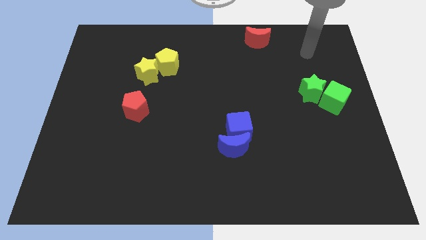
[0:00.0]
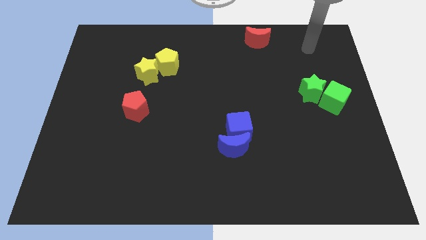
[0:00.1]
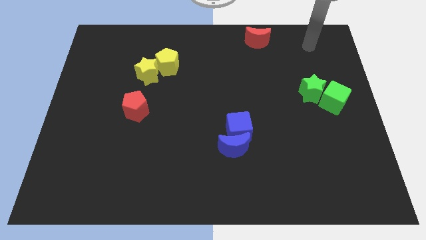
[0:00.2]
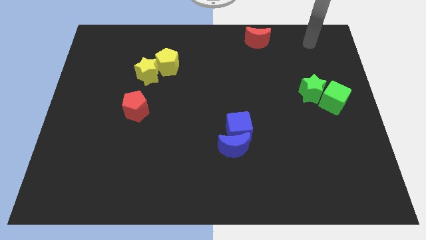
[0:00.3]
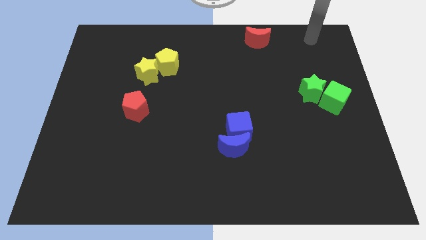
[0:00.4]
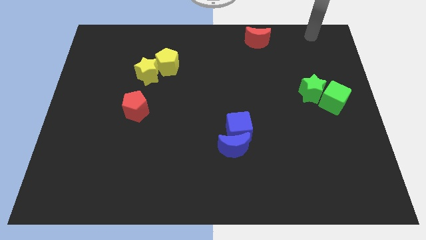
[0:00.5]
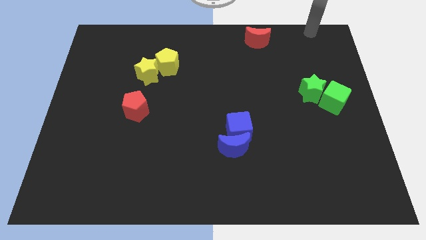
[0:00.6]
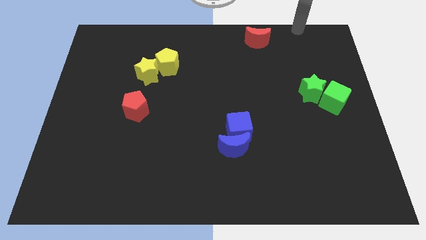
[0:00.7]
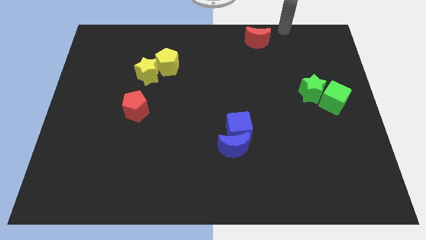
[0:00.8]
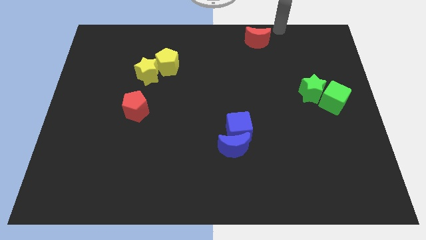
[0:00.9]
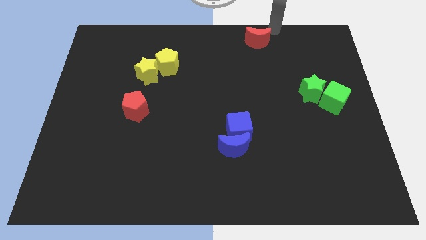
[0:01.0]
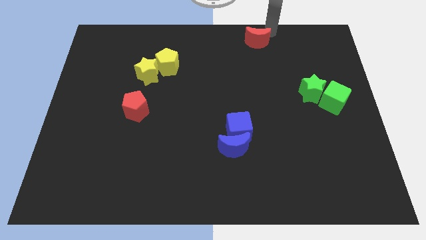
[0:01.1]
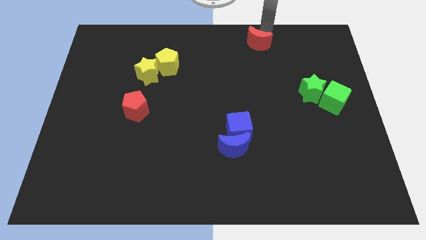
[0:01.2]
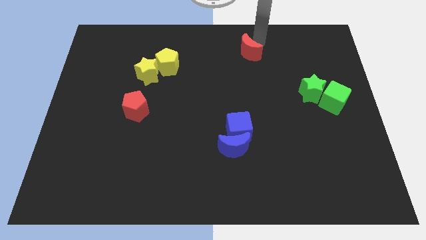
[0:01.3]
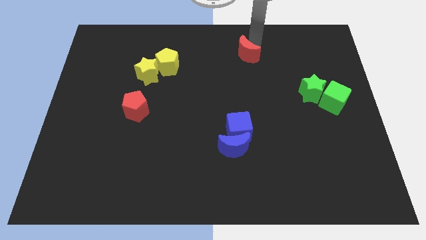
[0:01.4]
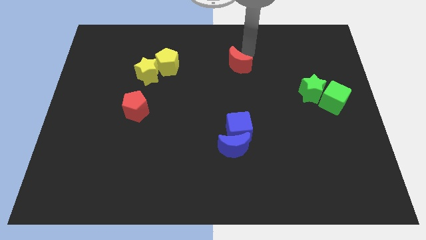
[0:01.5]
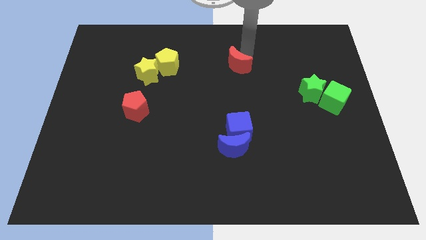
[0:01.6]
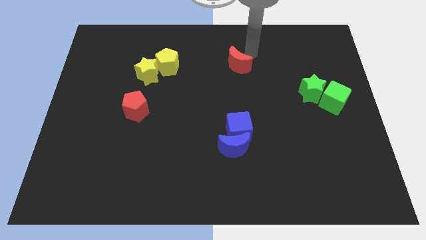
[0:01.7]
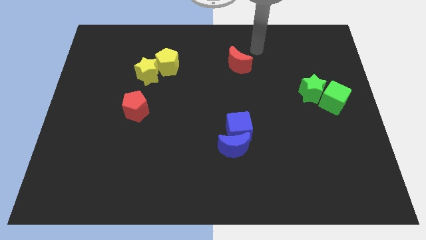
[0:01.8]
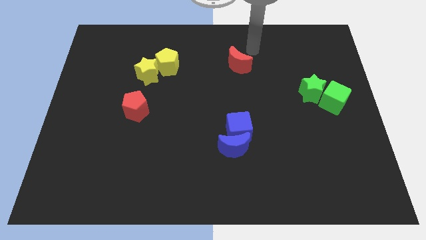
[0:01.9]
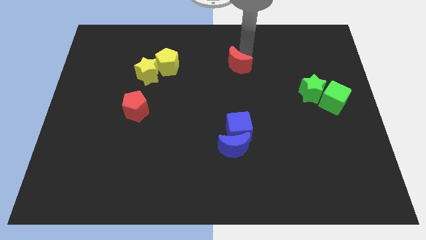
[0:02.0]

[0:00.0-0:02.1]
place the red moon above the blue blocks

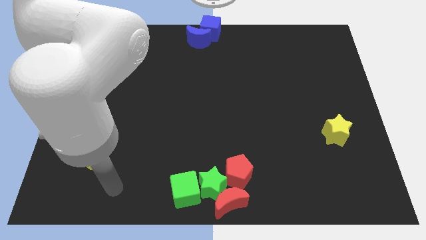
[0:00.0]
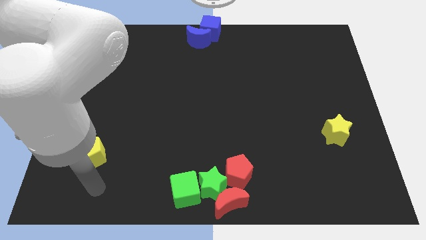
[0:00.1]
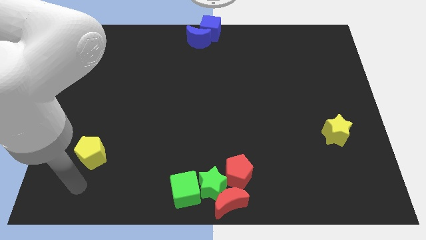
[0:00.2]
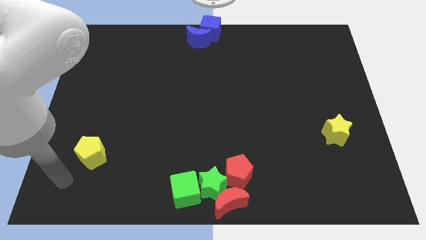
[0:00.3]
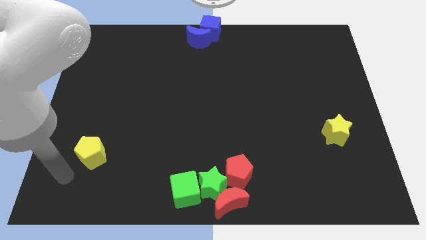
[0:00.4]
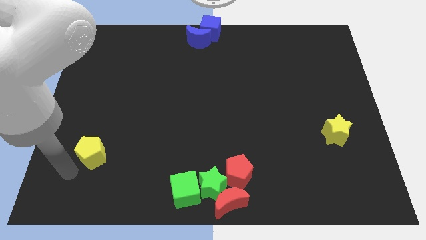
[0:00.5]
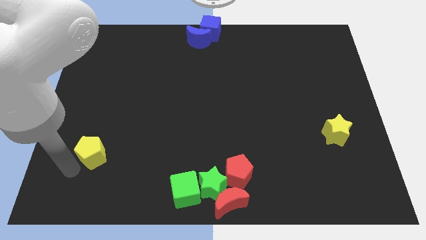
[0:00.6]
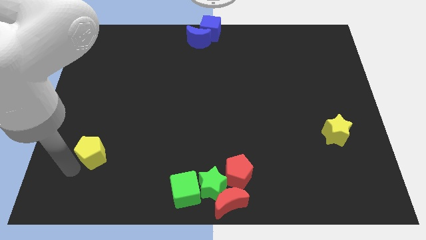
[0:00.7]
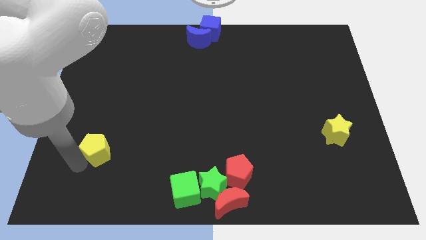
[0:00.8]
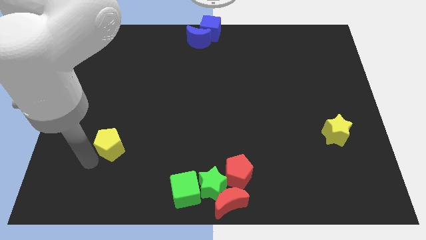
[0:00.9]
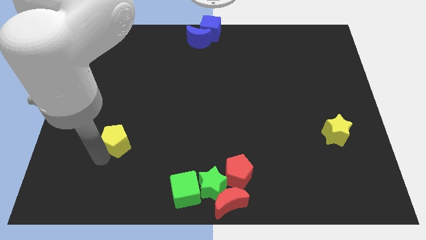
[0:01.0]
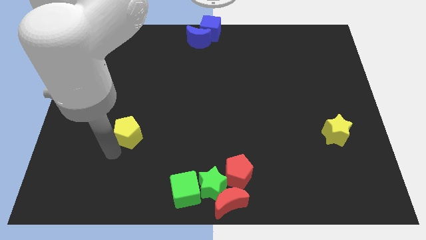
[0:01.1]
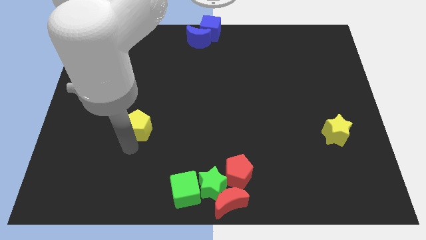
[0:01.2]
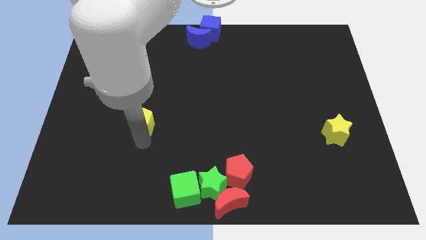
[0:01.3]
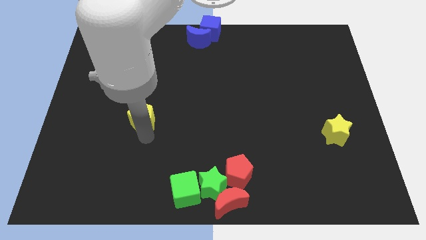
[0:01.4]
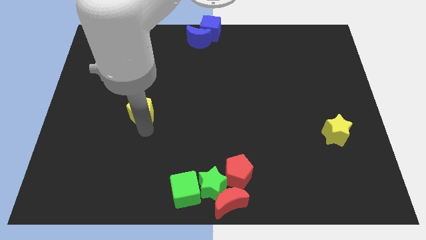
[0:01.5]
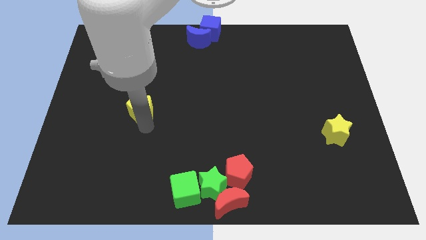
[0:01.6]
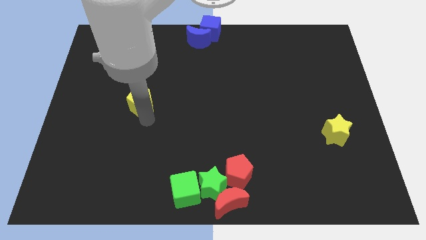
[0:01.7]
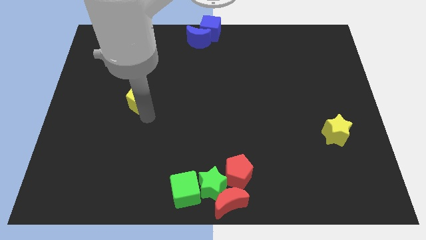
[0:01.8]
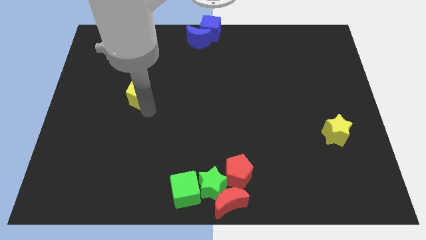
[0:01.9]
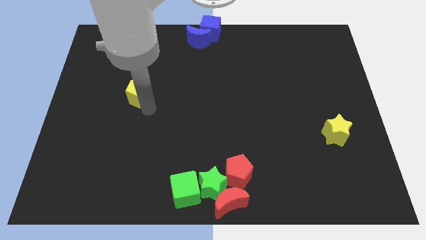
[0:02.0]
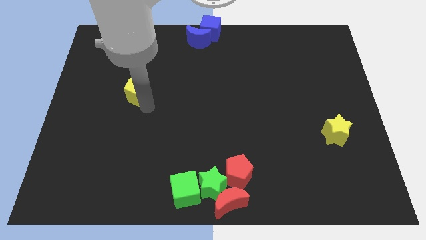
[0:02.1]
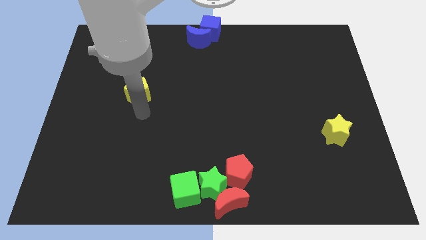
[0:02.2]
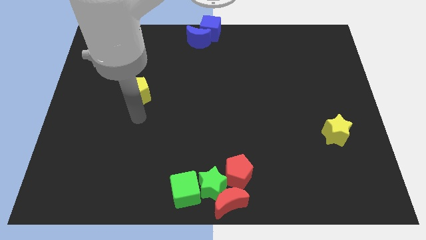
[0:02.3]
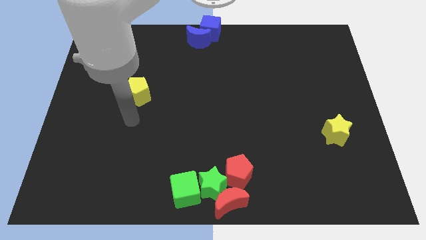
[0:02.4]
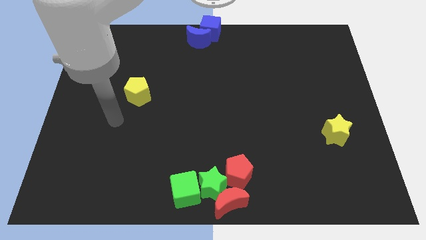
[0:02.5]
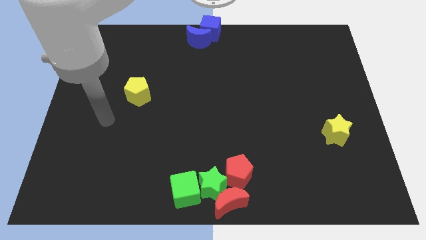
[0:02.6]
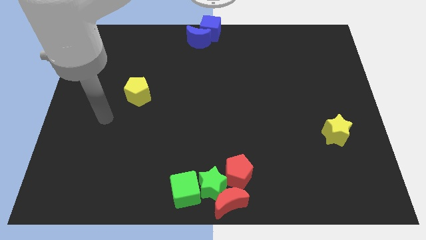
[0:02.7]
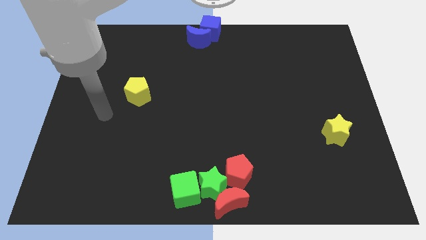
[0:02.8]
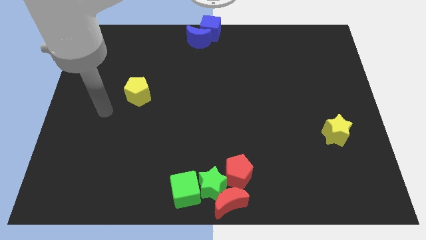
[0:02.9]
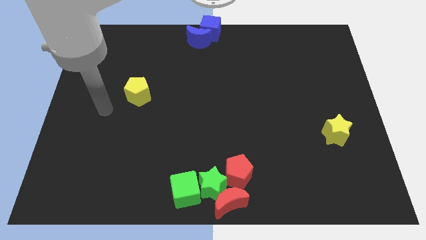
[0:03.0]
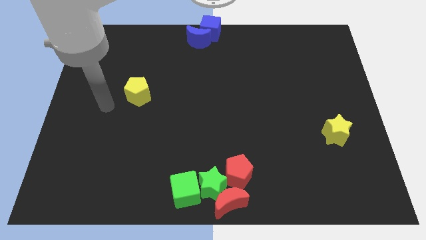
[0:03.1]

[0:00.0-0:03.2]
place the yellow pentagon diagonally top left to the yellow star

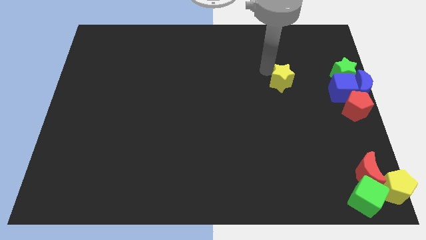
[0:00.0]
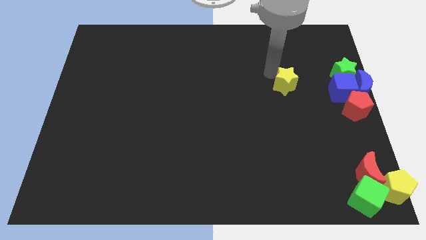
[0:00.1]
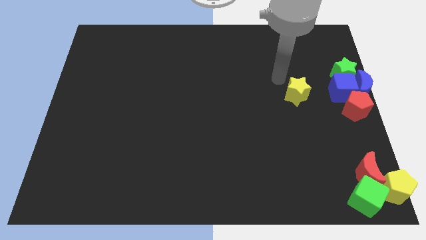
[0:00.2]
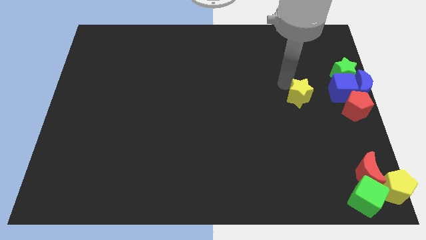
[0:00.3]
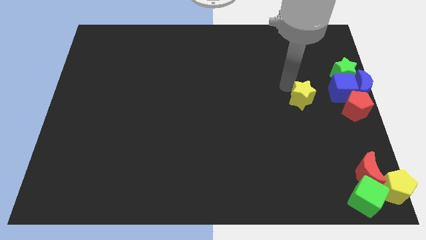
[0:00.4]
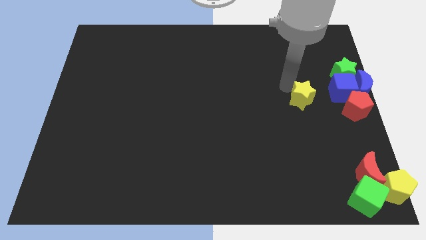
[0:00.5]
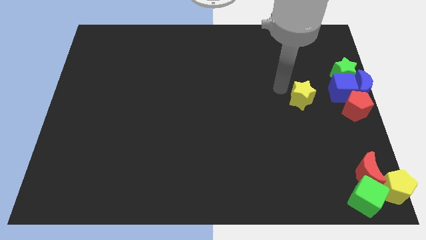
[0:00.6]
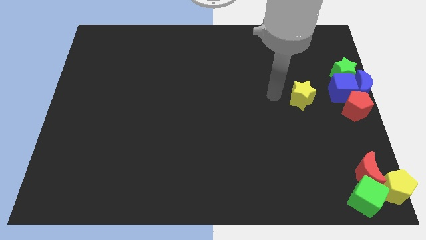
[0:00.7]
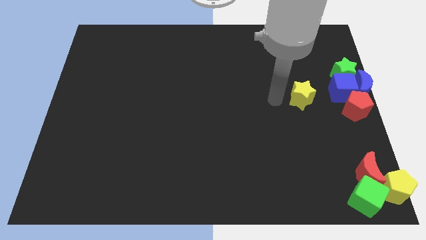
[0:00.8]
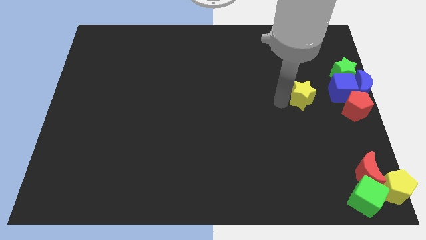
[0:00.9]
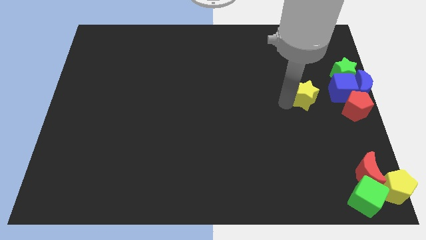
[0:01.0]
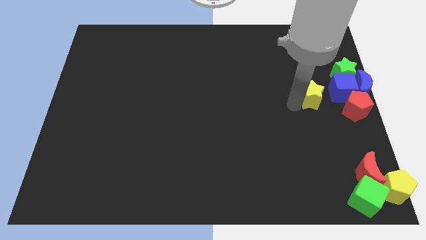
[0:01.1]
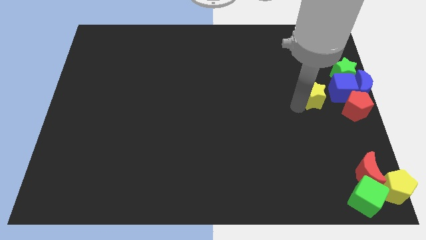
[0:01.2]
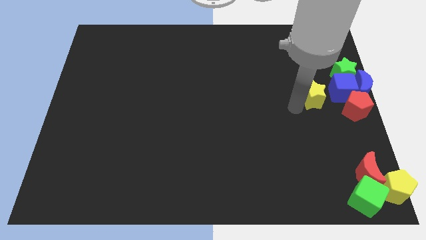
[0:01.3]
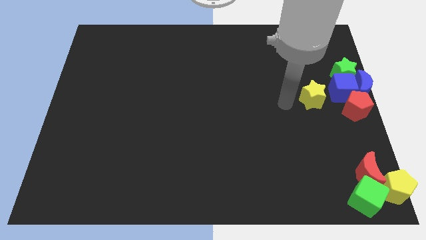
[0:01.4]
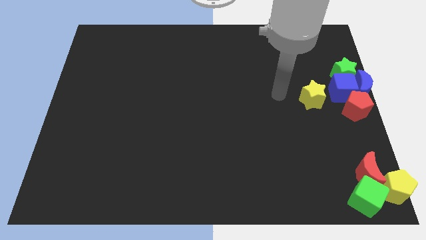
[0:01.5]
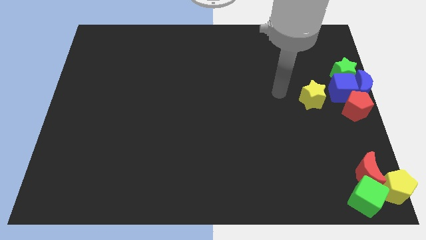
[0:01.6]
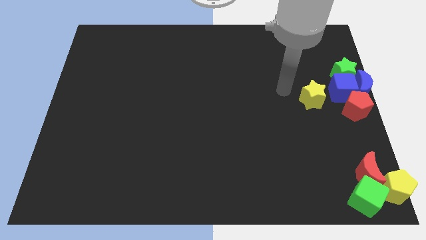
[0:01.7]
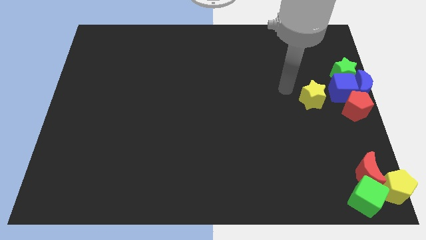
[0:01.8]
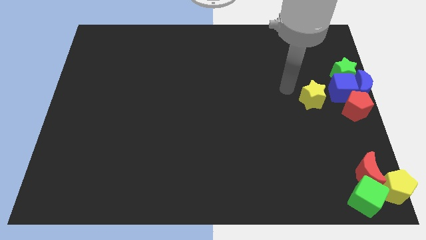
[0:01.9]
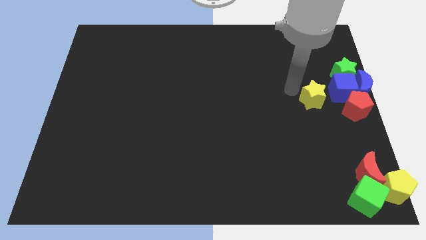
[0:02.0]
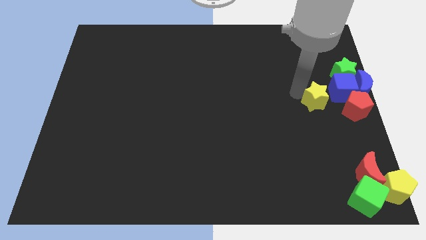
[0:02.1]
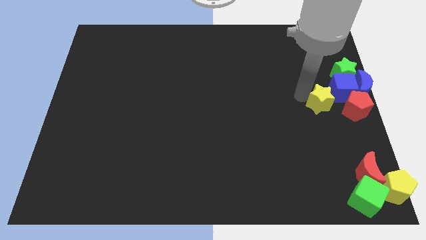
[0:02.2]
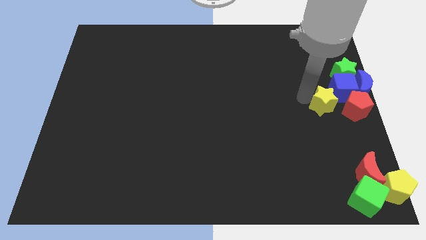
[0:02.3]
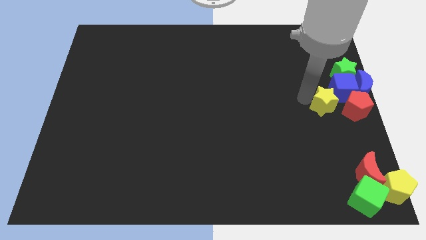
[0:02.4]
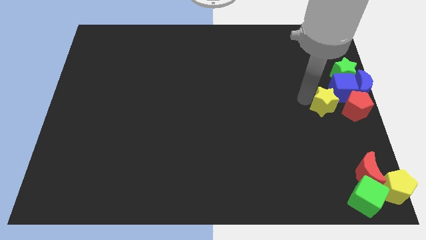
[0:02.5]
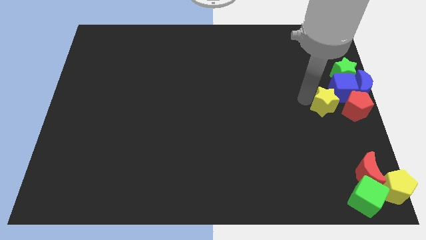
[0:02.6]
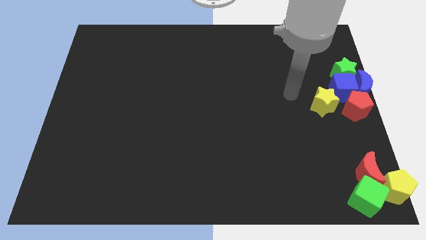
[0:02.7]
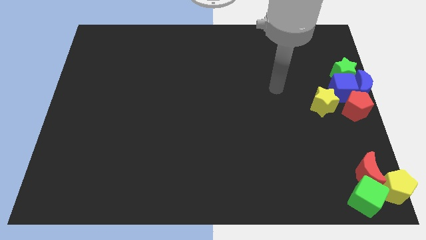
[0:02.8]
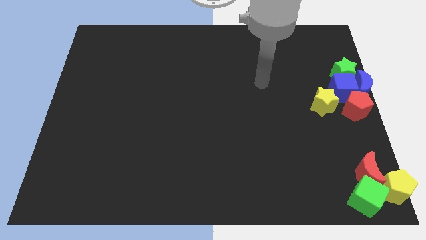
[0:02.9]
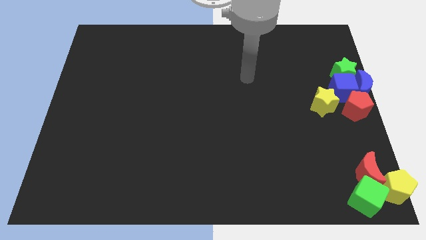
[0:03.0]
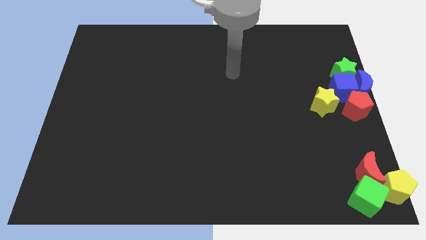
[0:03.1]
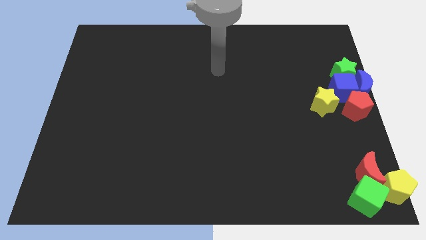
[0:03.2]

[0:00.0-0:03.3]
move the yellow star to the left of the red pentagon

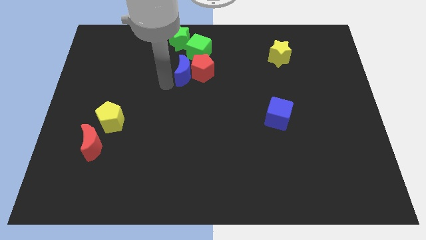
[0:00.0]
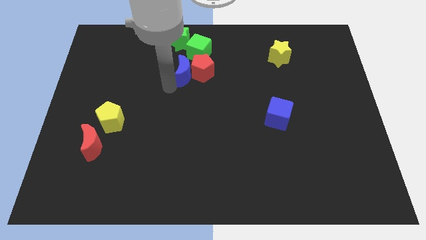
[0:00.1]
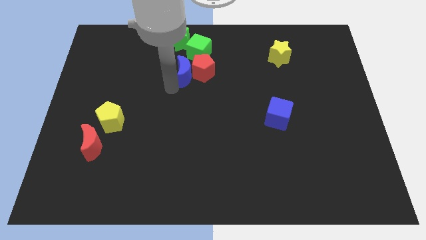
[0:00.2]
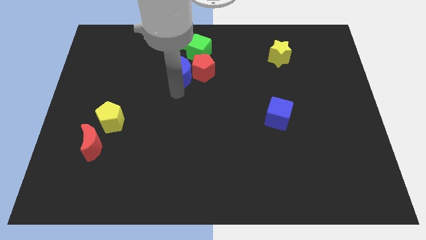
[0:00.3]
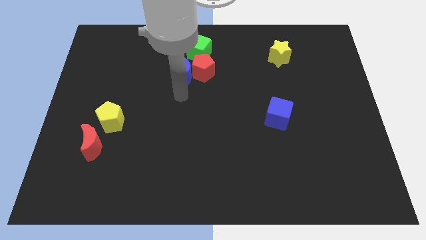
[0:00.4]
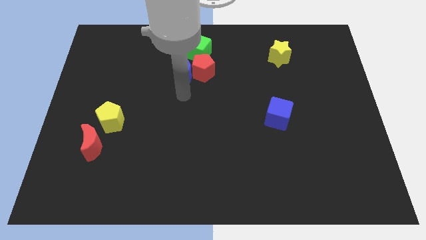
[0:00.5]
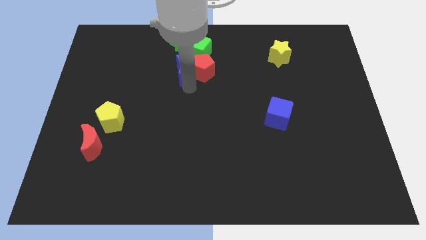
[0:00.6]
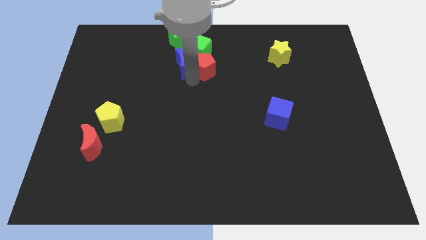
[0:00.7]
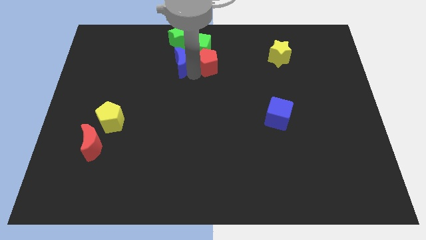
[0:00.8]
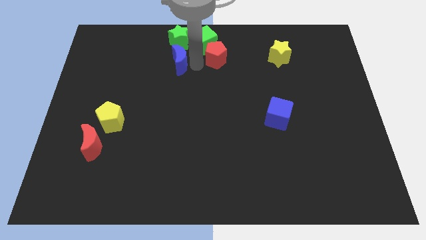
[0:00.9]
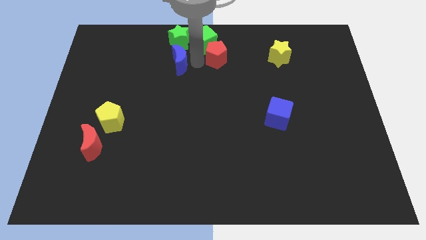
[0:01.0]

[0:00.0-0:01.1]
seperate blue moon and red pentagon
